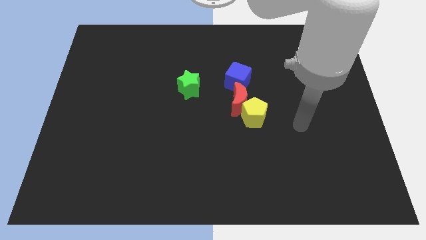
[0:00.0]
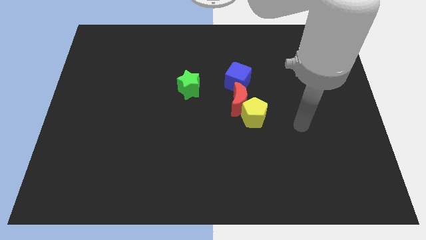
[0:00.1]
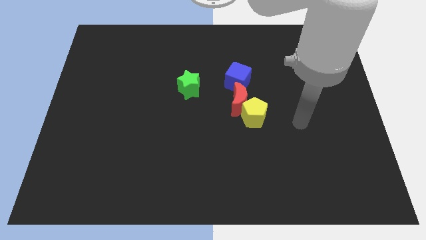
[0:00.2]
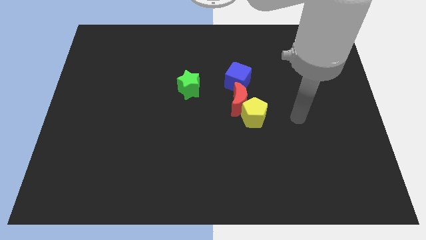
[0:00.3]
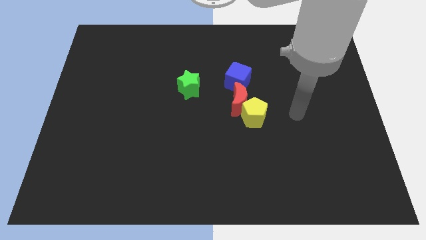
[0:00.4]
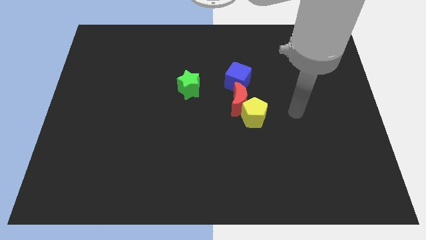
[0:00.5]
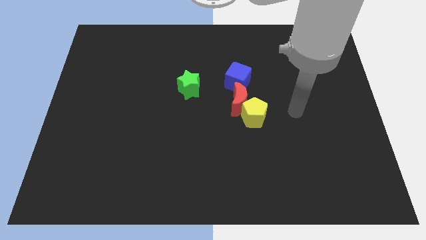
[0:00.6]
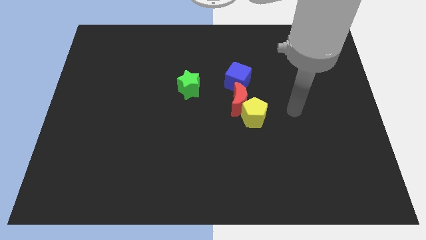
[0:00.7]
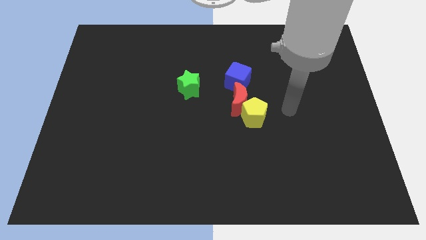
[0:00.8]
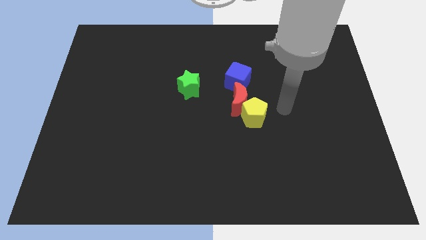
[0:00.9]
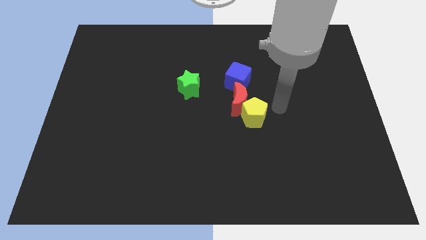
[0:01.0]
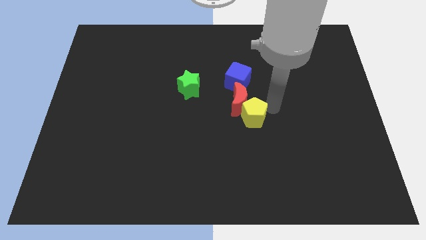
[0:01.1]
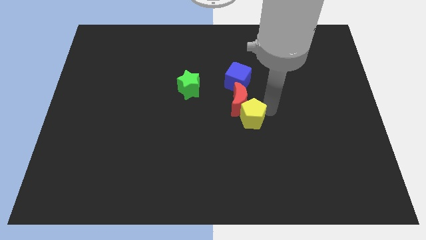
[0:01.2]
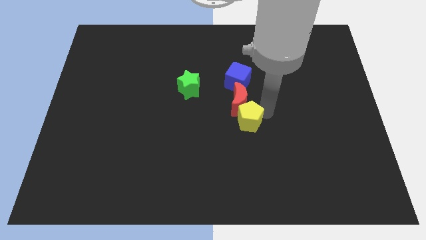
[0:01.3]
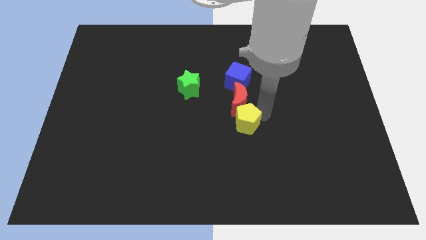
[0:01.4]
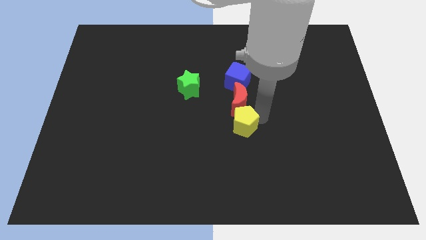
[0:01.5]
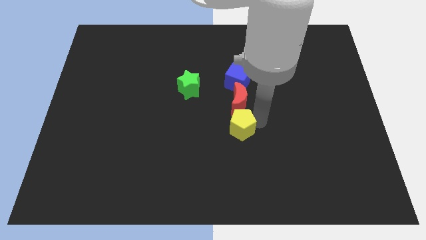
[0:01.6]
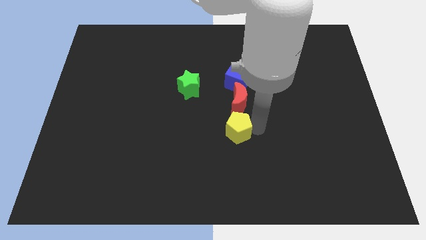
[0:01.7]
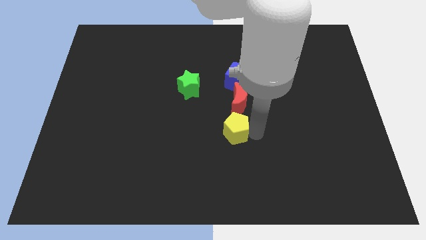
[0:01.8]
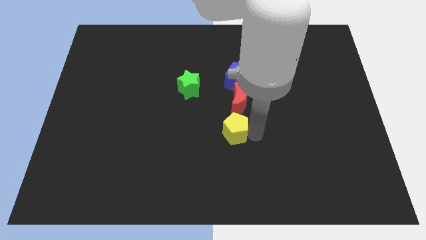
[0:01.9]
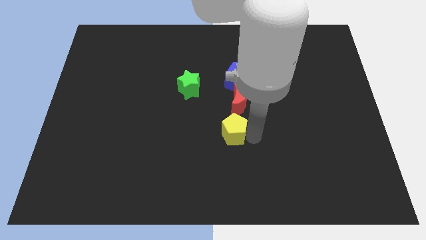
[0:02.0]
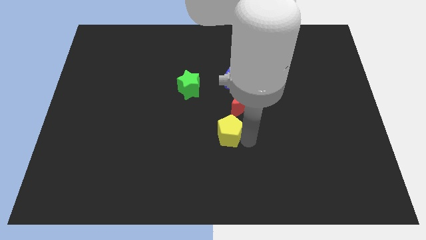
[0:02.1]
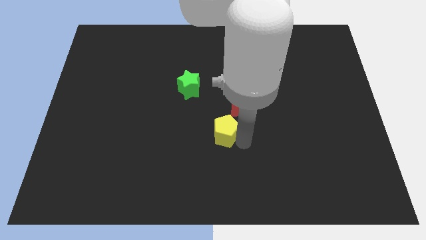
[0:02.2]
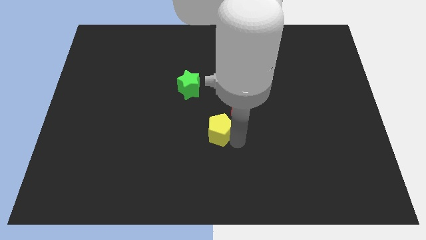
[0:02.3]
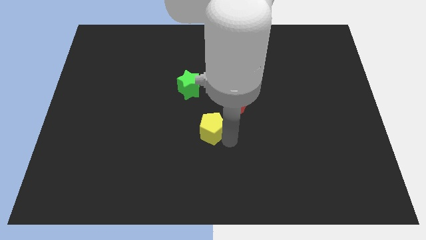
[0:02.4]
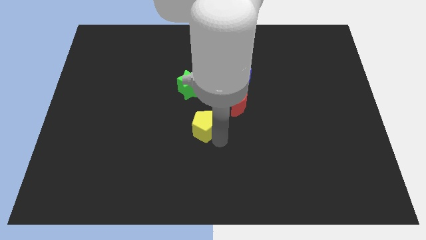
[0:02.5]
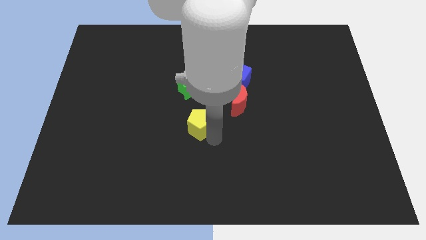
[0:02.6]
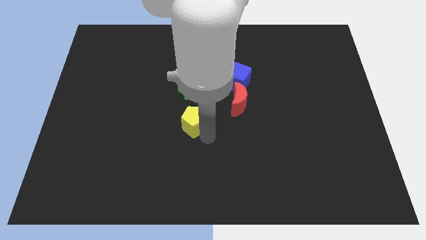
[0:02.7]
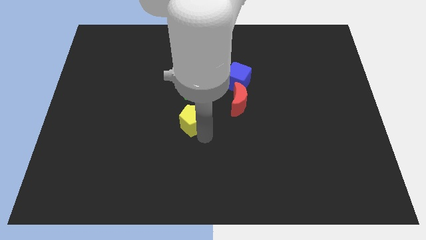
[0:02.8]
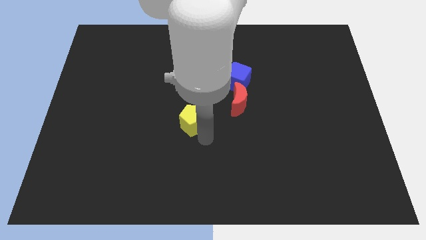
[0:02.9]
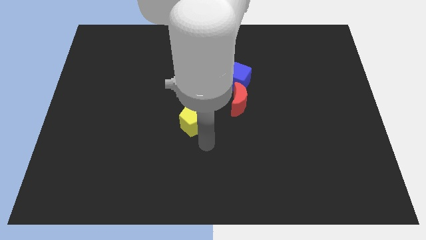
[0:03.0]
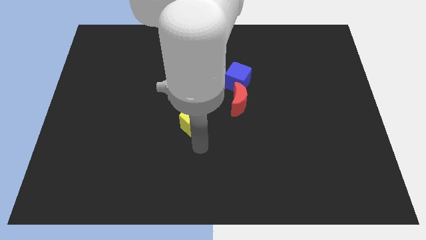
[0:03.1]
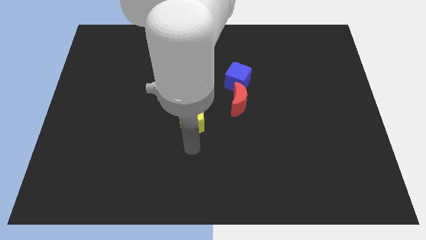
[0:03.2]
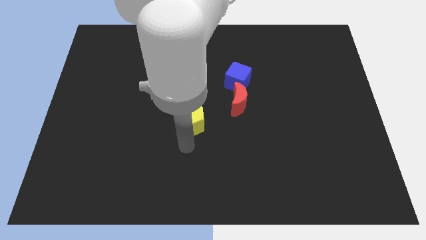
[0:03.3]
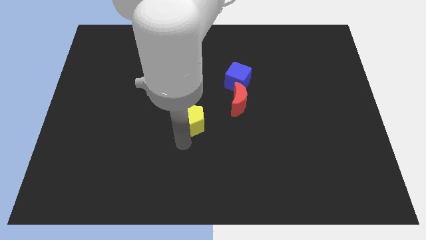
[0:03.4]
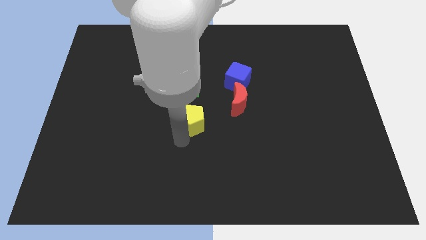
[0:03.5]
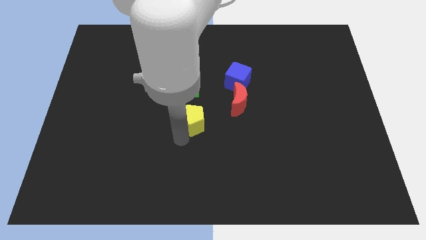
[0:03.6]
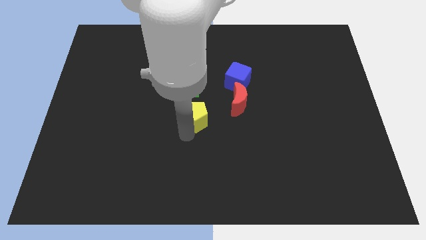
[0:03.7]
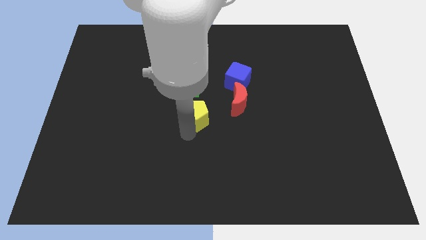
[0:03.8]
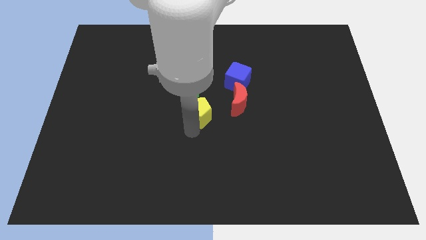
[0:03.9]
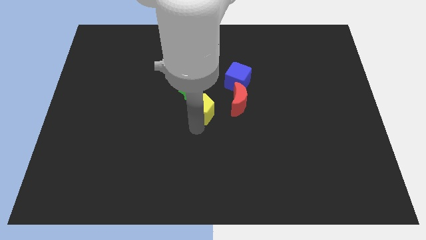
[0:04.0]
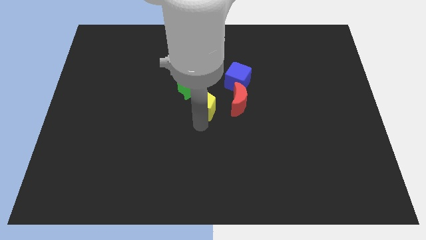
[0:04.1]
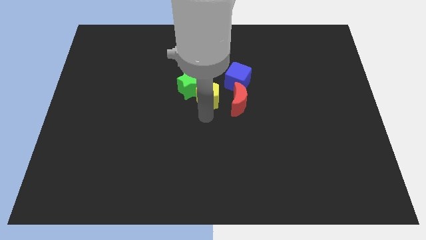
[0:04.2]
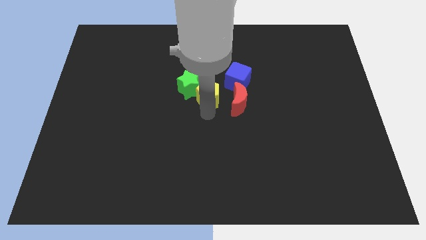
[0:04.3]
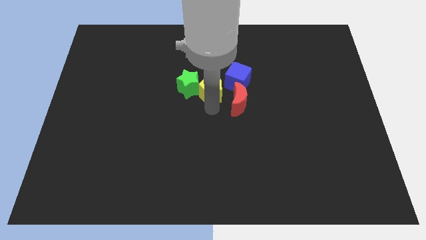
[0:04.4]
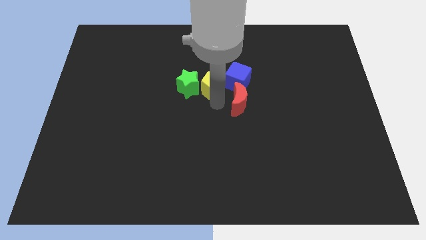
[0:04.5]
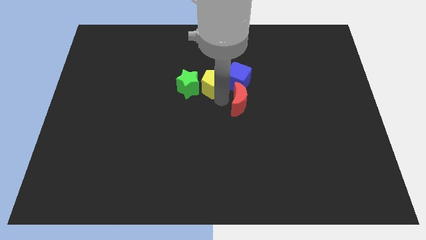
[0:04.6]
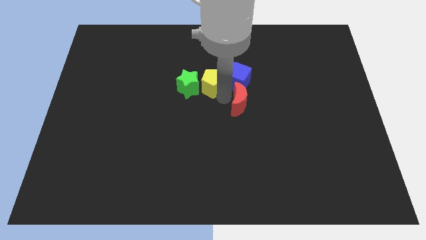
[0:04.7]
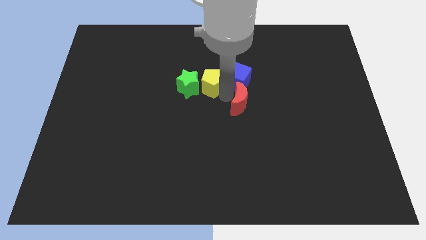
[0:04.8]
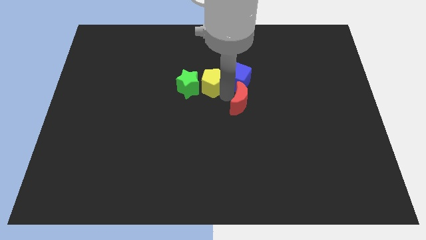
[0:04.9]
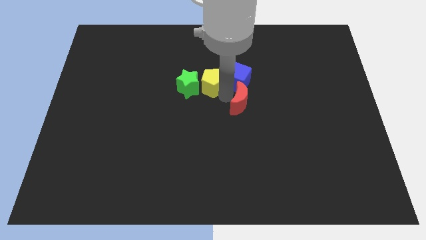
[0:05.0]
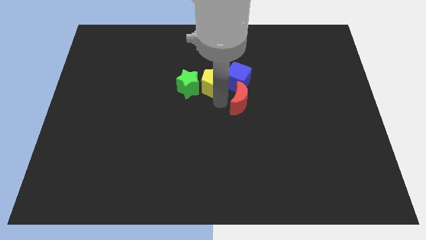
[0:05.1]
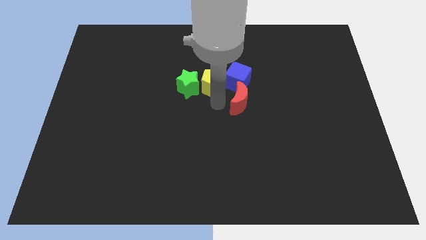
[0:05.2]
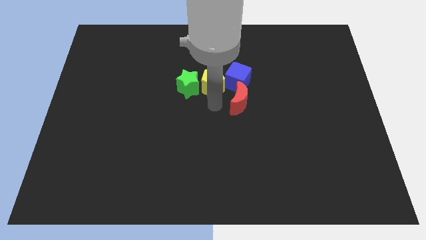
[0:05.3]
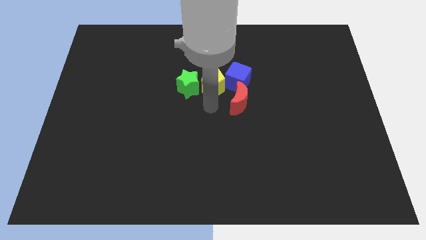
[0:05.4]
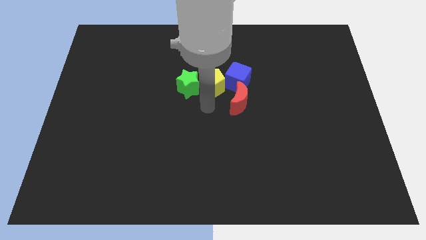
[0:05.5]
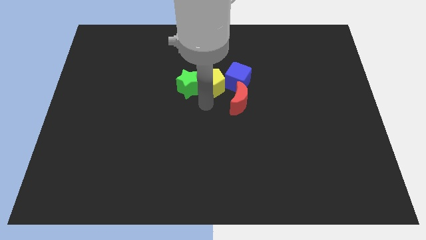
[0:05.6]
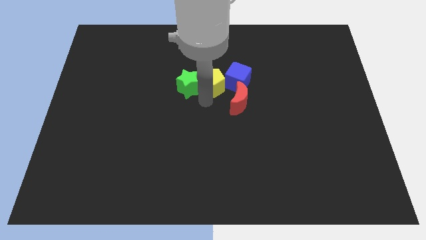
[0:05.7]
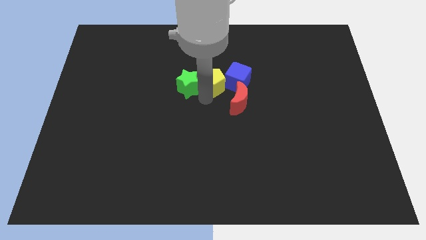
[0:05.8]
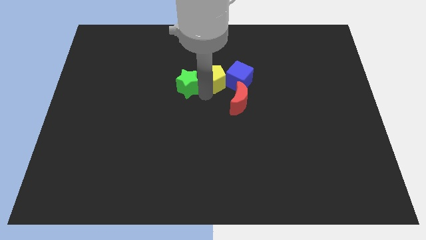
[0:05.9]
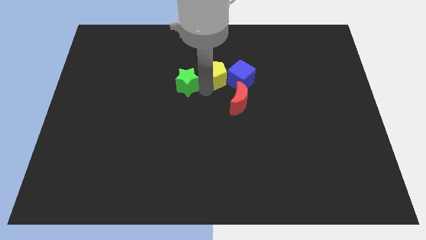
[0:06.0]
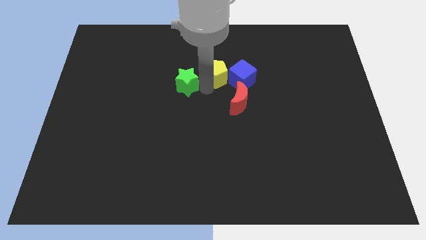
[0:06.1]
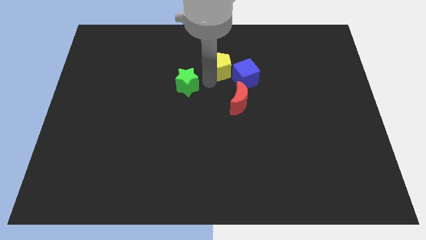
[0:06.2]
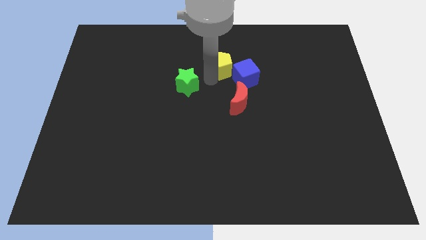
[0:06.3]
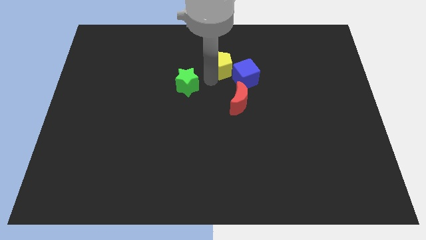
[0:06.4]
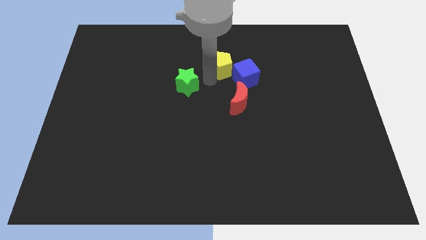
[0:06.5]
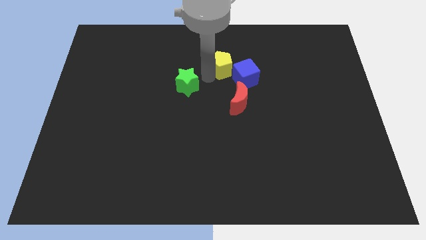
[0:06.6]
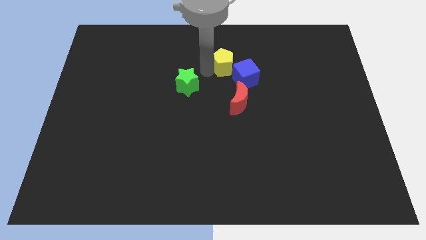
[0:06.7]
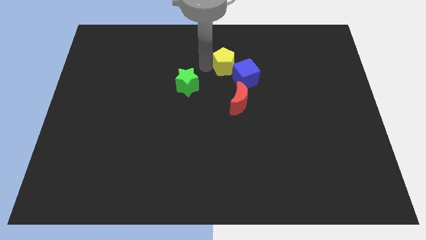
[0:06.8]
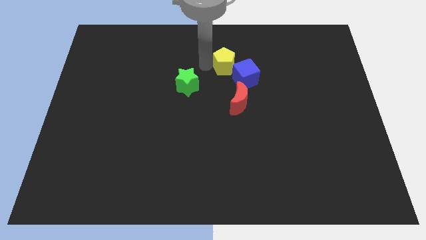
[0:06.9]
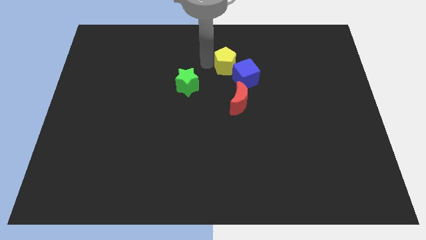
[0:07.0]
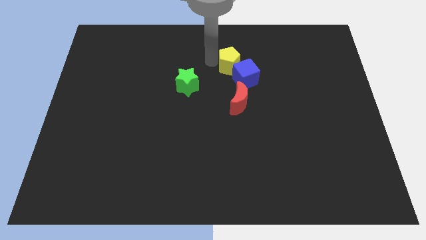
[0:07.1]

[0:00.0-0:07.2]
put the pentagon to the blue cube

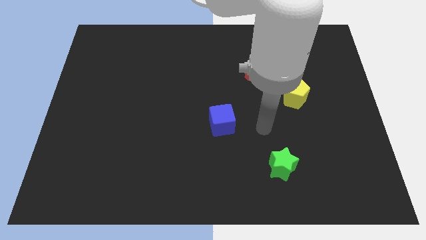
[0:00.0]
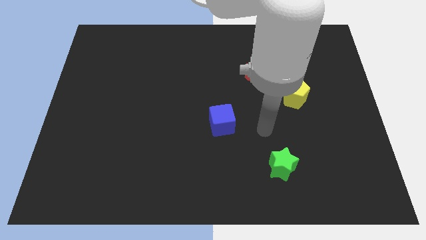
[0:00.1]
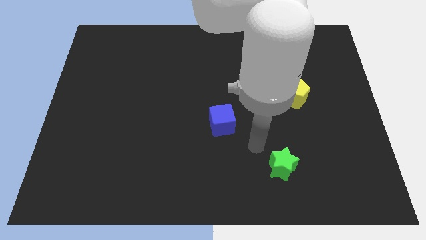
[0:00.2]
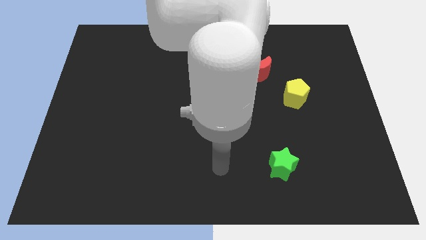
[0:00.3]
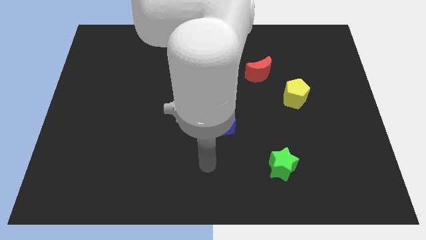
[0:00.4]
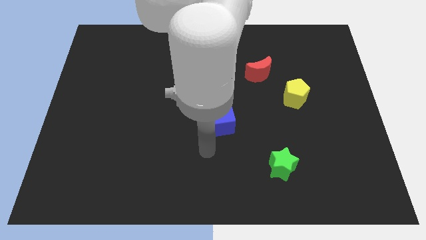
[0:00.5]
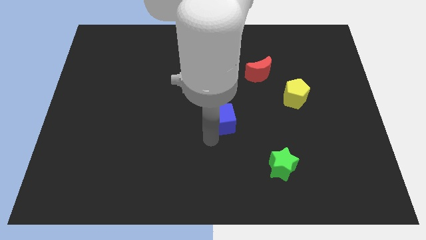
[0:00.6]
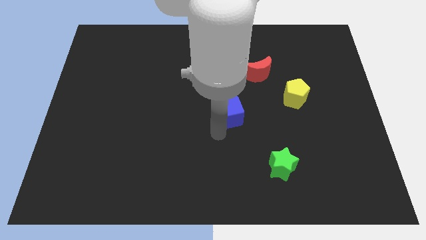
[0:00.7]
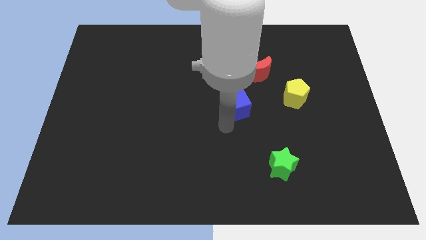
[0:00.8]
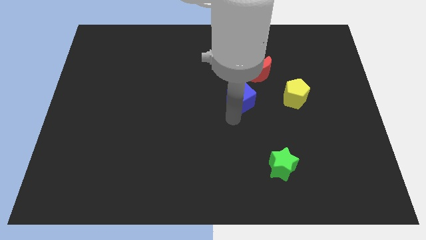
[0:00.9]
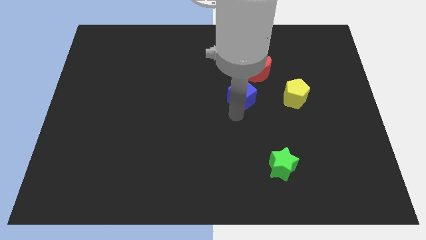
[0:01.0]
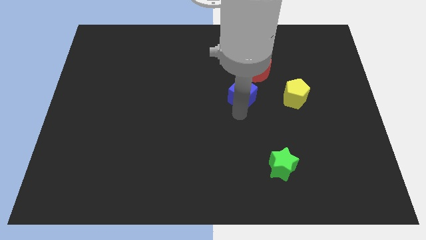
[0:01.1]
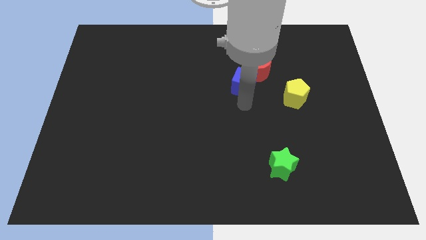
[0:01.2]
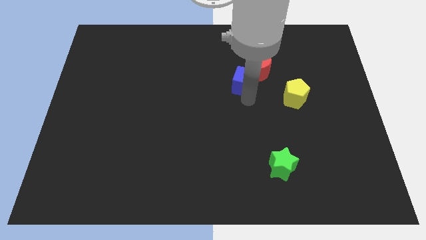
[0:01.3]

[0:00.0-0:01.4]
put the blue cube close to the red block

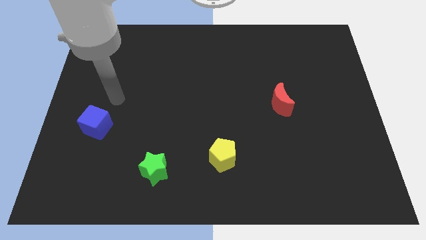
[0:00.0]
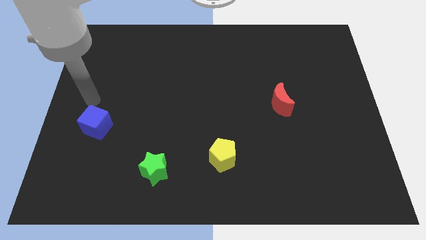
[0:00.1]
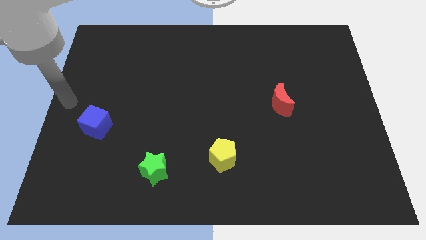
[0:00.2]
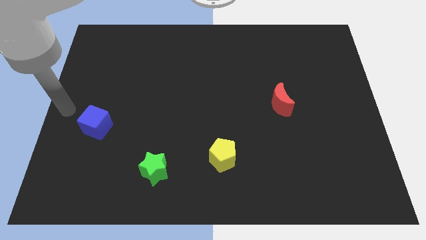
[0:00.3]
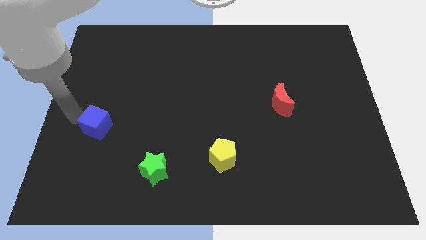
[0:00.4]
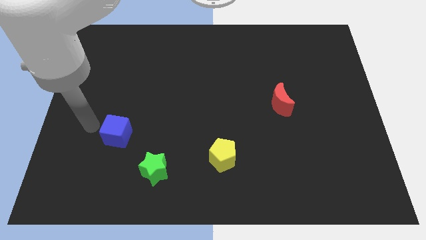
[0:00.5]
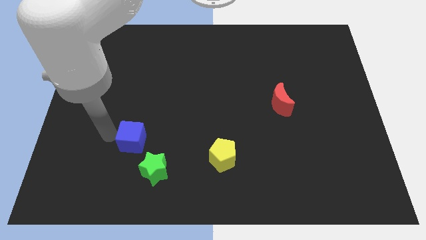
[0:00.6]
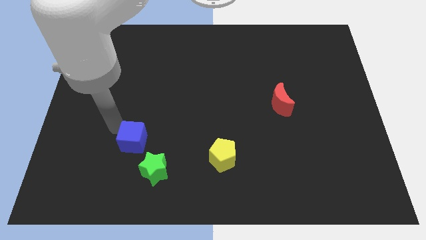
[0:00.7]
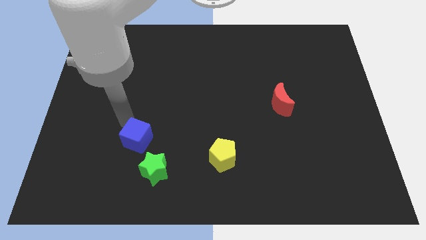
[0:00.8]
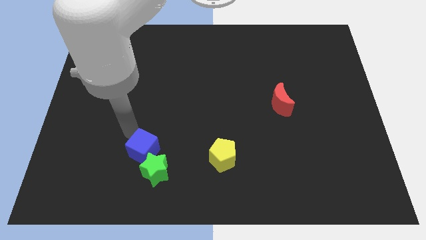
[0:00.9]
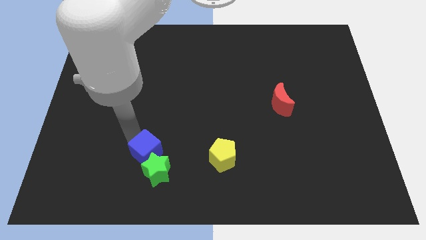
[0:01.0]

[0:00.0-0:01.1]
move the blue block close to the star
